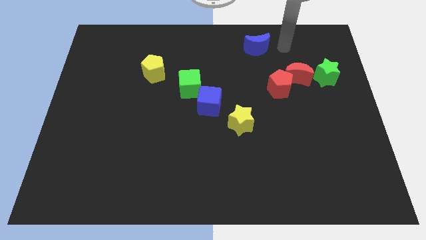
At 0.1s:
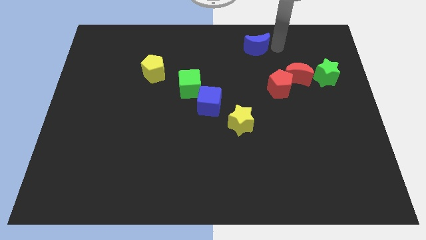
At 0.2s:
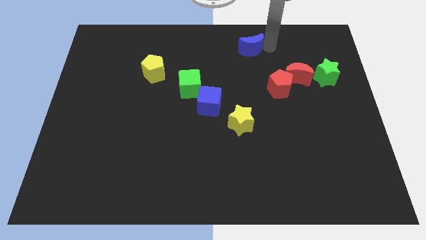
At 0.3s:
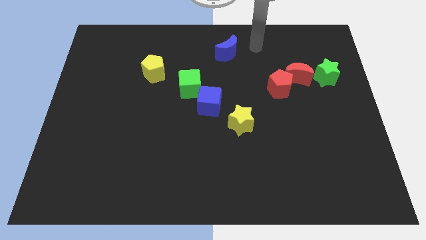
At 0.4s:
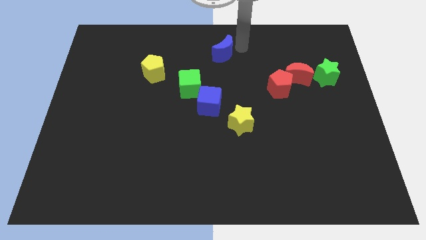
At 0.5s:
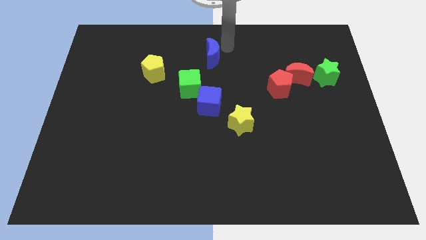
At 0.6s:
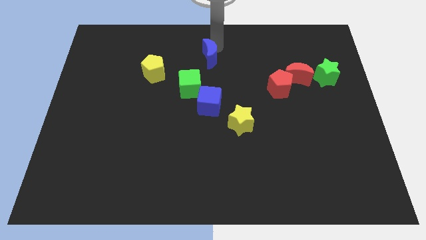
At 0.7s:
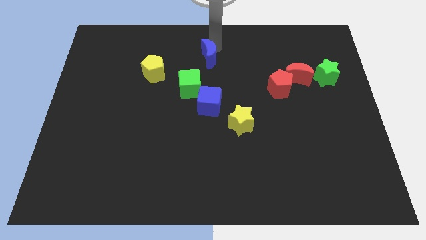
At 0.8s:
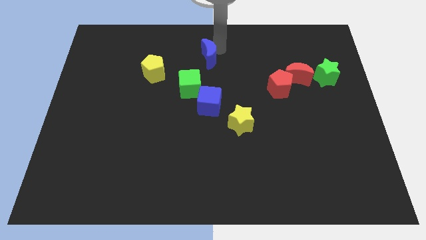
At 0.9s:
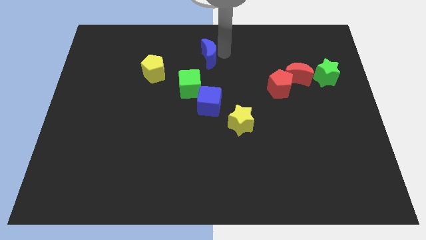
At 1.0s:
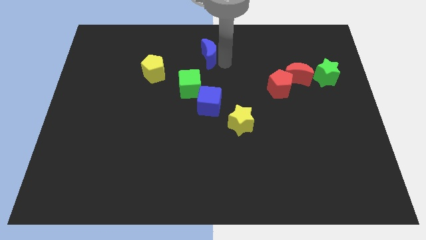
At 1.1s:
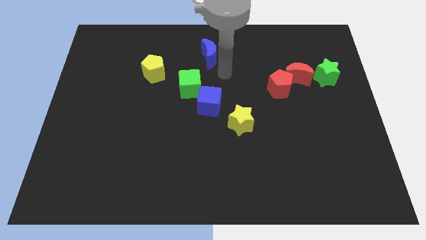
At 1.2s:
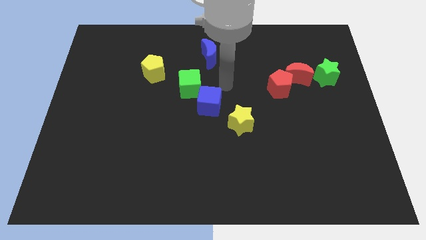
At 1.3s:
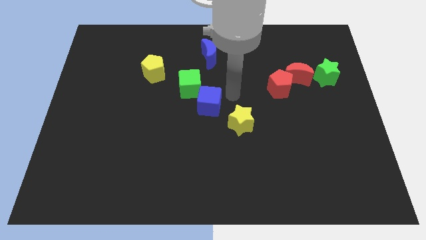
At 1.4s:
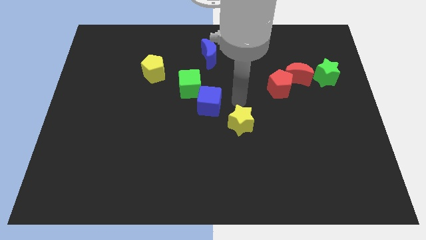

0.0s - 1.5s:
place the blue moon at the top of blue cube

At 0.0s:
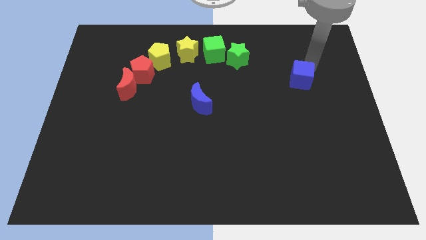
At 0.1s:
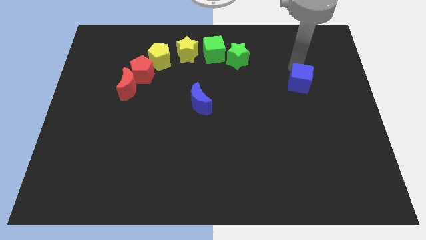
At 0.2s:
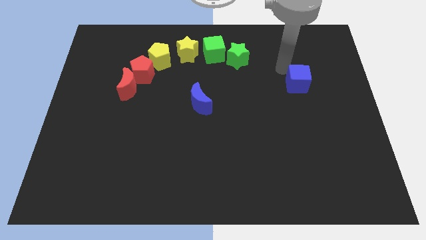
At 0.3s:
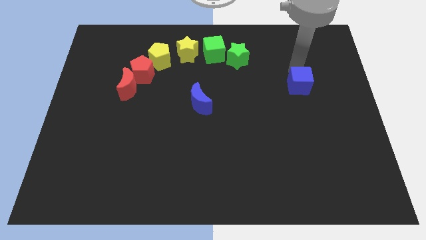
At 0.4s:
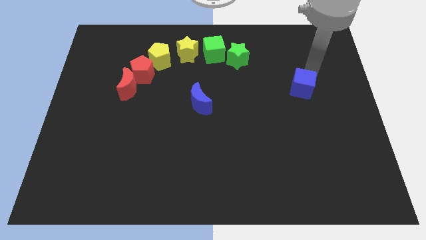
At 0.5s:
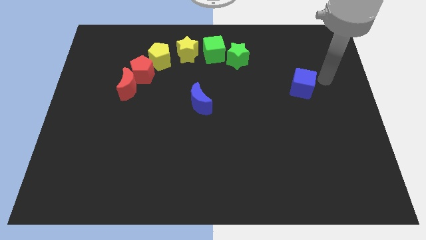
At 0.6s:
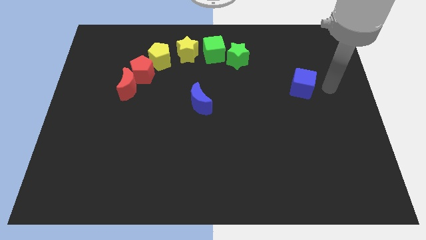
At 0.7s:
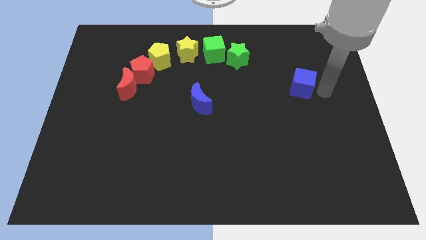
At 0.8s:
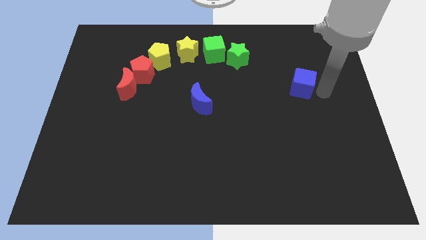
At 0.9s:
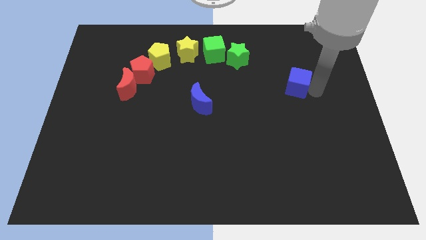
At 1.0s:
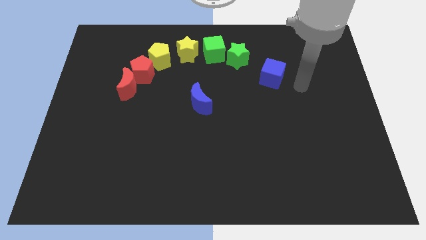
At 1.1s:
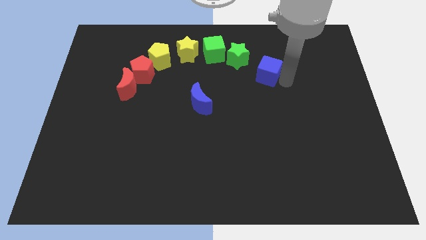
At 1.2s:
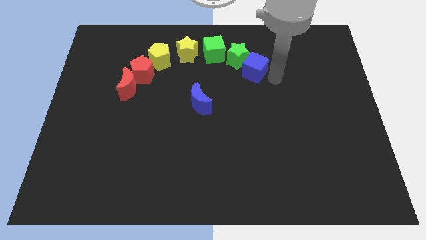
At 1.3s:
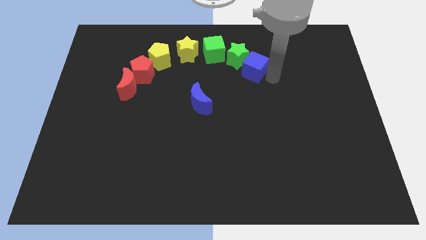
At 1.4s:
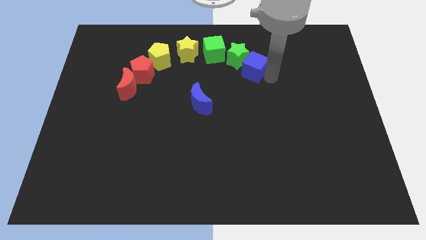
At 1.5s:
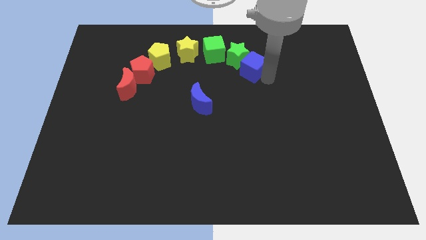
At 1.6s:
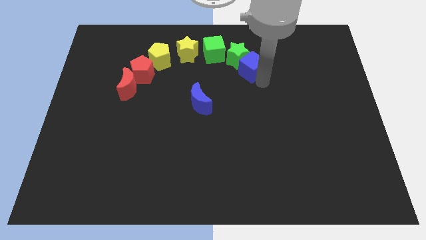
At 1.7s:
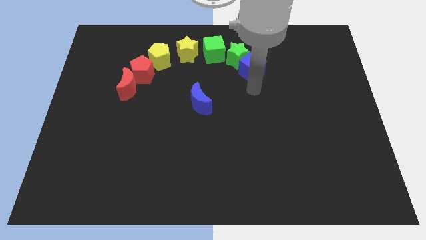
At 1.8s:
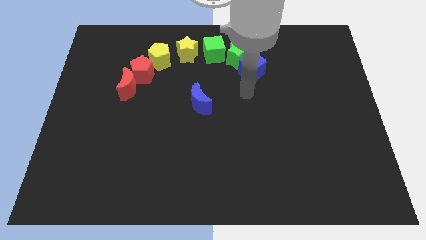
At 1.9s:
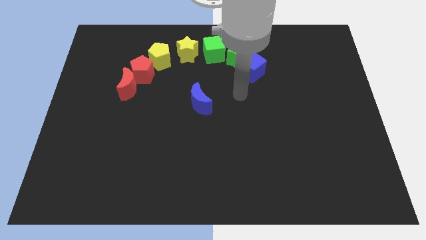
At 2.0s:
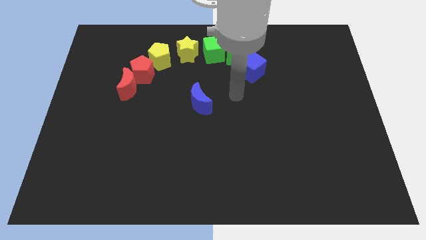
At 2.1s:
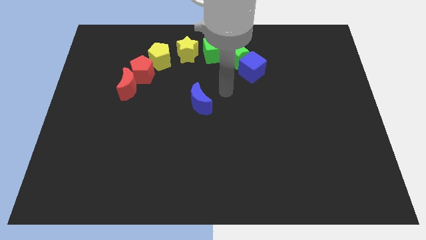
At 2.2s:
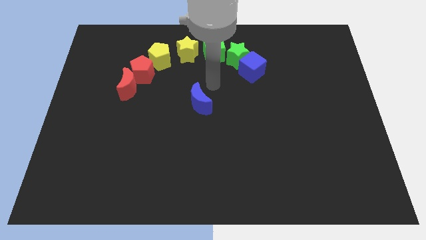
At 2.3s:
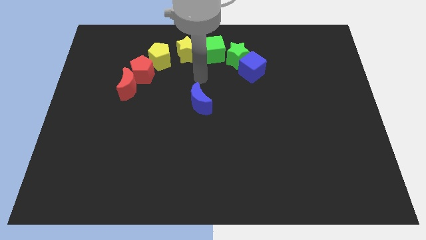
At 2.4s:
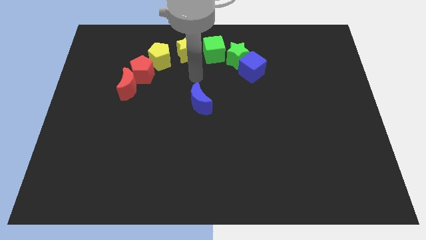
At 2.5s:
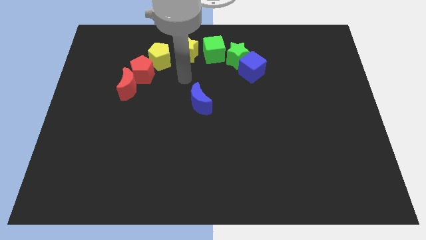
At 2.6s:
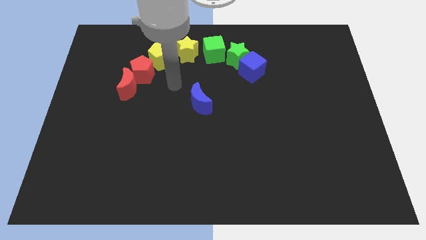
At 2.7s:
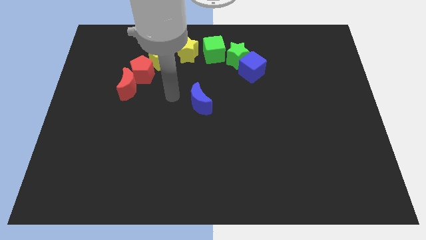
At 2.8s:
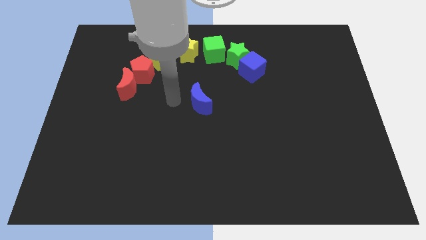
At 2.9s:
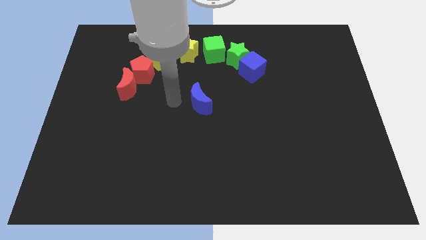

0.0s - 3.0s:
put the blue cube into the green star

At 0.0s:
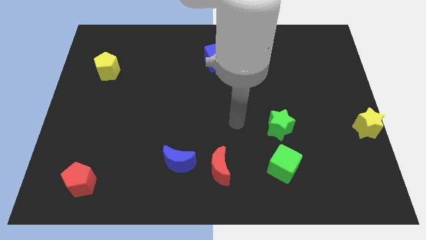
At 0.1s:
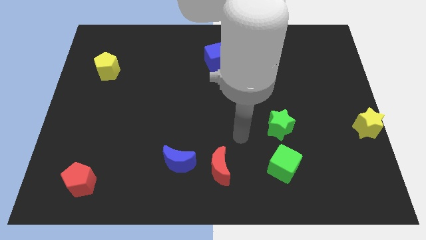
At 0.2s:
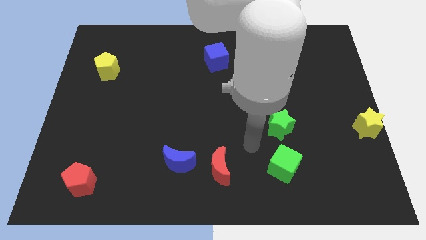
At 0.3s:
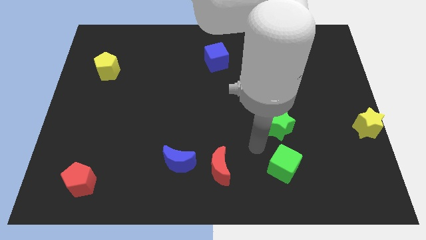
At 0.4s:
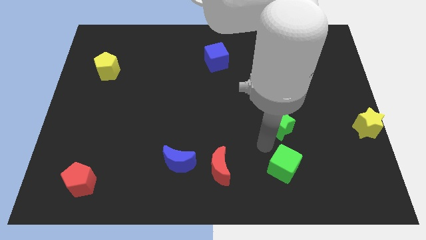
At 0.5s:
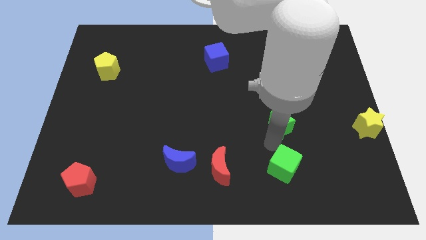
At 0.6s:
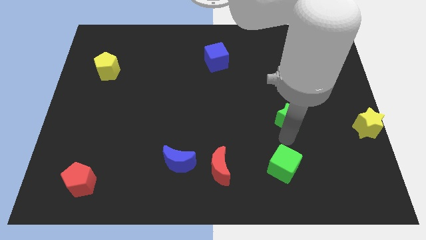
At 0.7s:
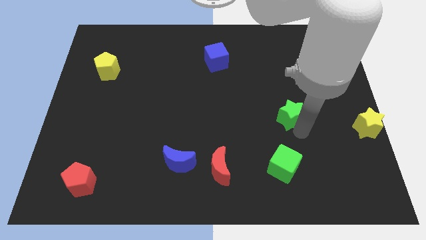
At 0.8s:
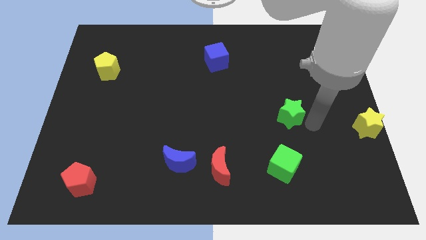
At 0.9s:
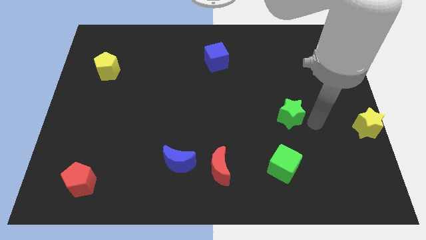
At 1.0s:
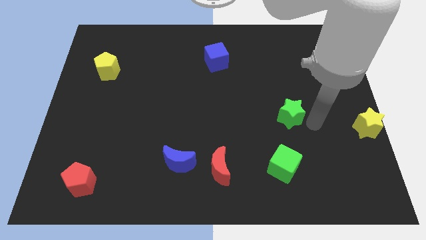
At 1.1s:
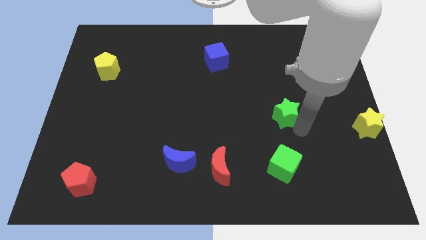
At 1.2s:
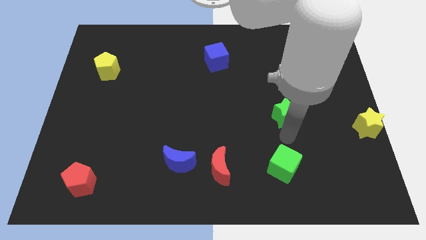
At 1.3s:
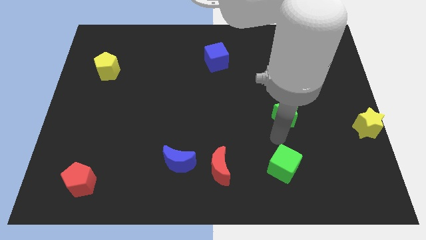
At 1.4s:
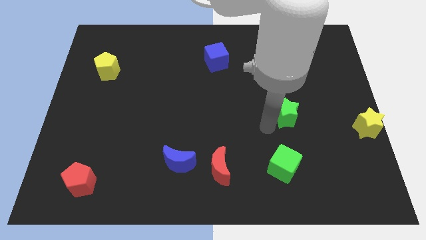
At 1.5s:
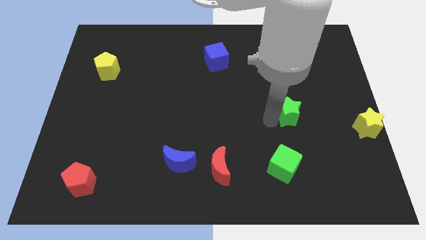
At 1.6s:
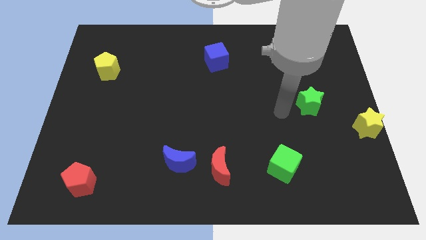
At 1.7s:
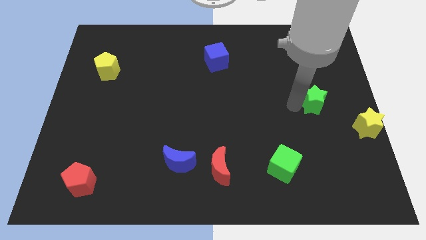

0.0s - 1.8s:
move the green star to the right side of the board

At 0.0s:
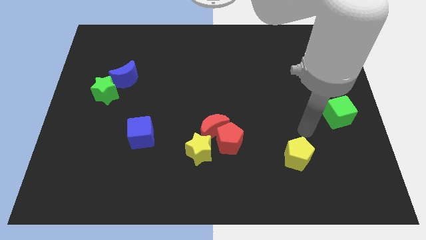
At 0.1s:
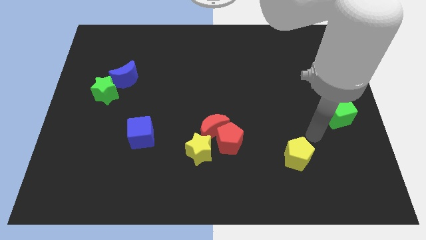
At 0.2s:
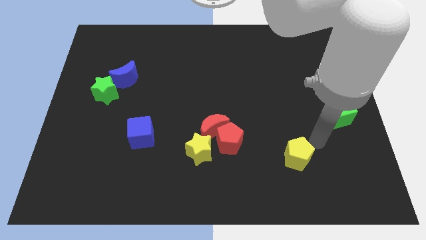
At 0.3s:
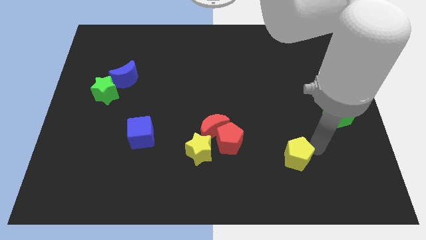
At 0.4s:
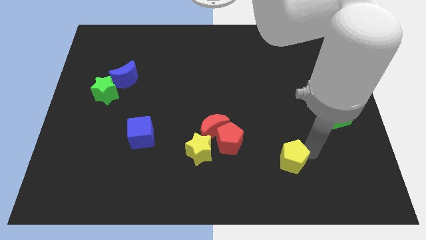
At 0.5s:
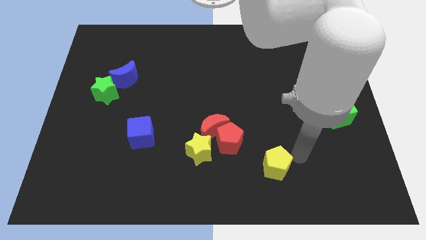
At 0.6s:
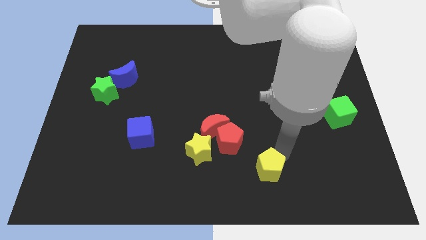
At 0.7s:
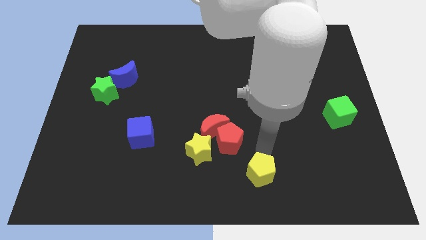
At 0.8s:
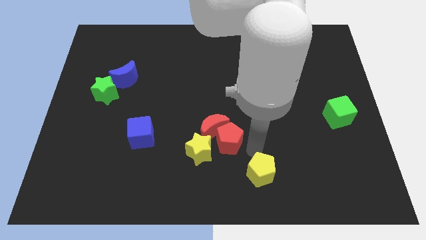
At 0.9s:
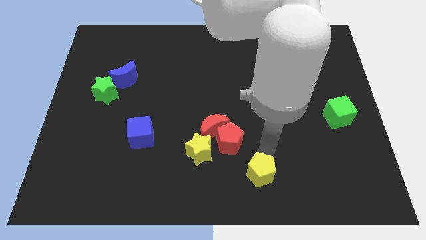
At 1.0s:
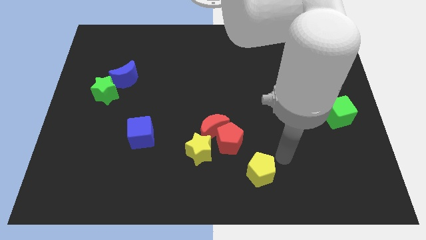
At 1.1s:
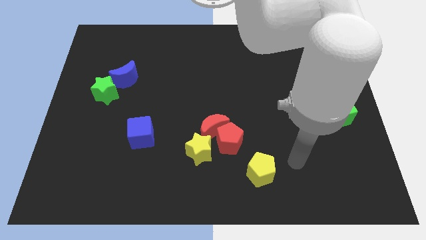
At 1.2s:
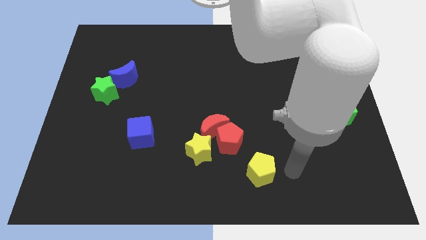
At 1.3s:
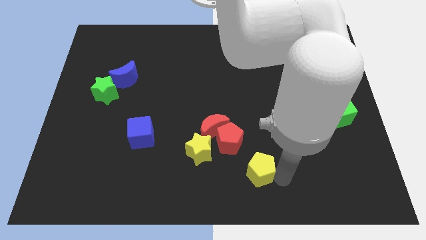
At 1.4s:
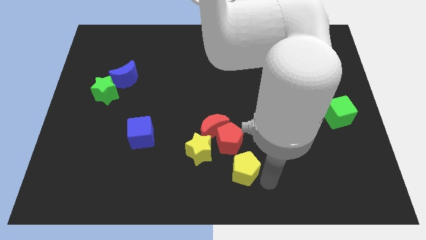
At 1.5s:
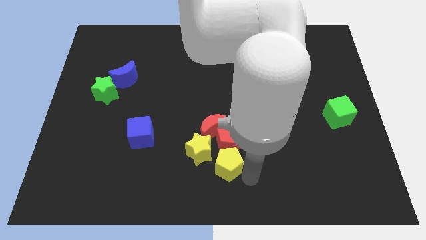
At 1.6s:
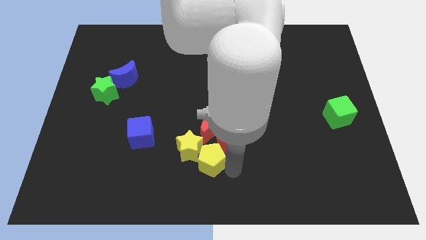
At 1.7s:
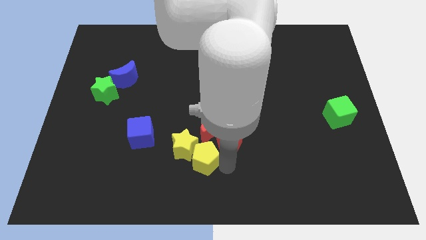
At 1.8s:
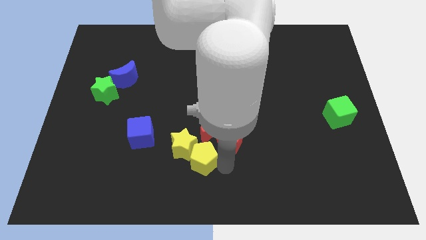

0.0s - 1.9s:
push the yellow pentagon to the bottom right of the yellow star

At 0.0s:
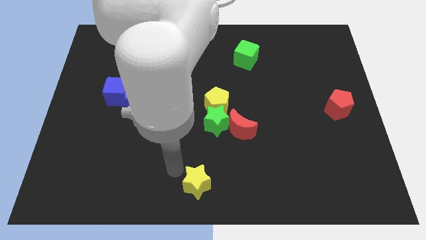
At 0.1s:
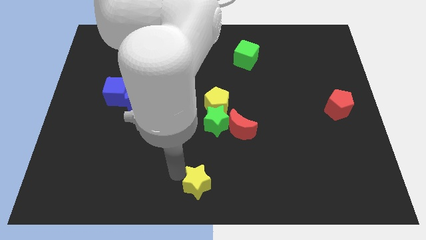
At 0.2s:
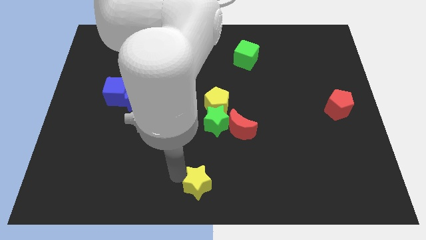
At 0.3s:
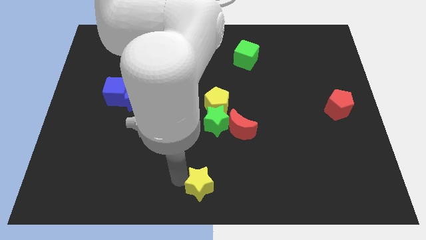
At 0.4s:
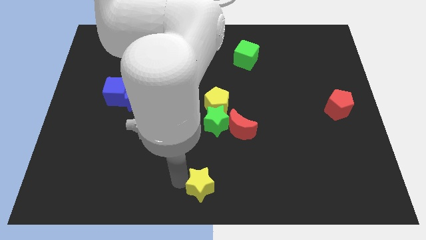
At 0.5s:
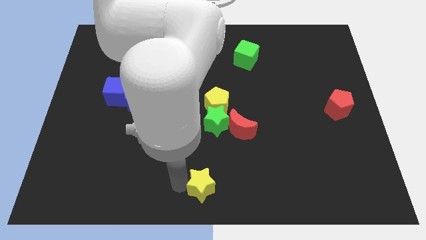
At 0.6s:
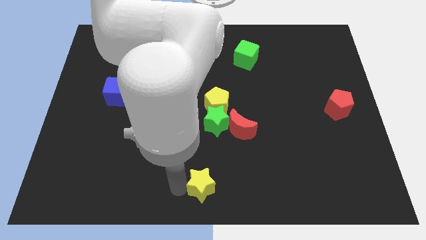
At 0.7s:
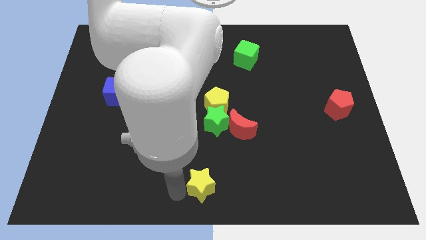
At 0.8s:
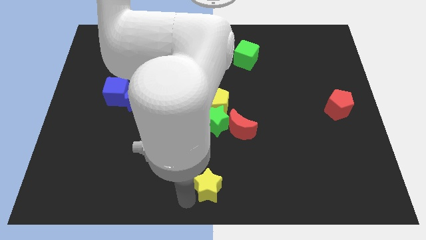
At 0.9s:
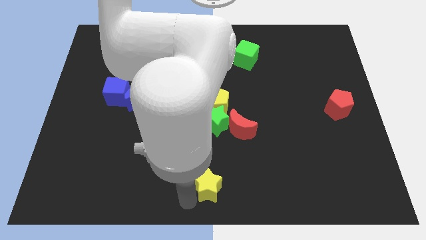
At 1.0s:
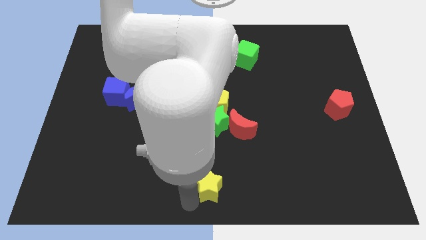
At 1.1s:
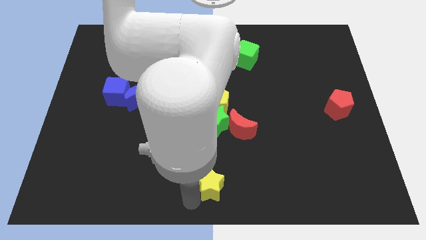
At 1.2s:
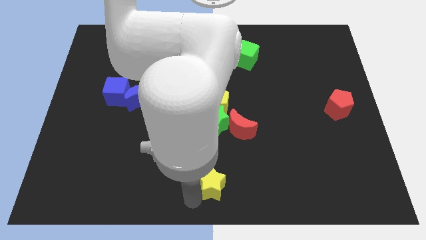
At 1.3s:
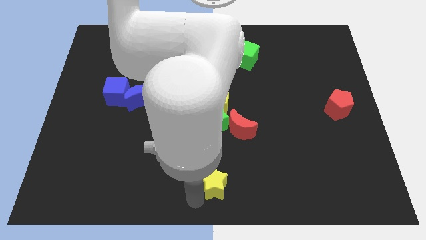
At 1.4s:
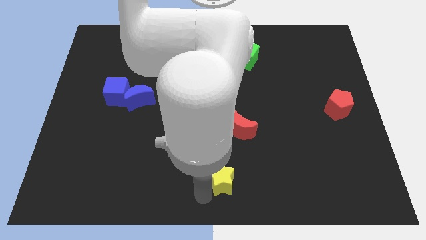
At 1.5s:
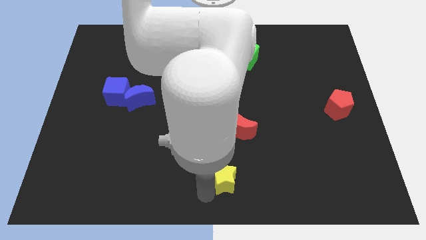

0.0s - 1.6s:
drag the yellow star towards bottom center of the board
